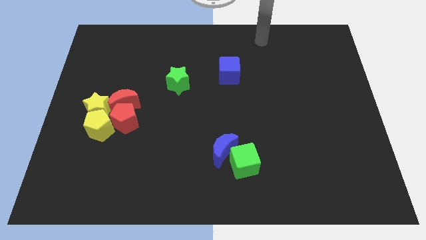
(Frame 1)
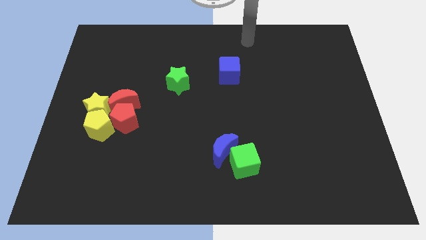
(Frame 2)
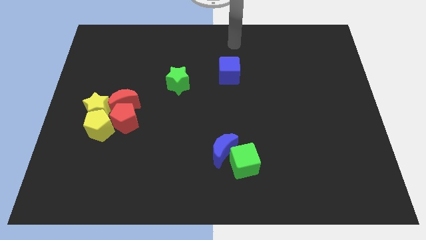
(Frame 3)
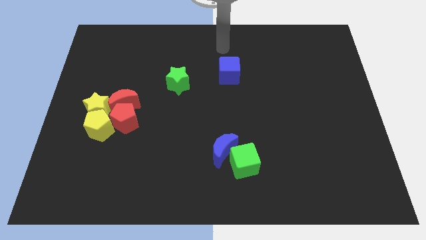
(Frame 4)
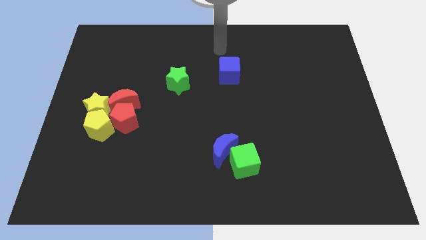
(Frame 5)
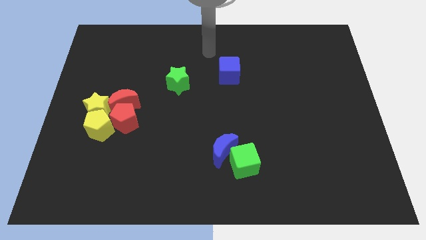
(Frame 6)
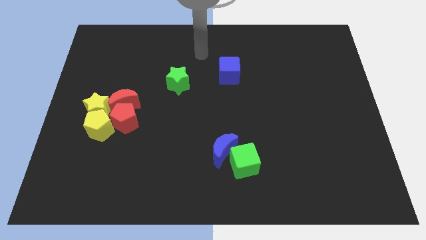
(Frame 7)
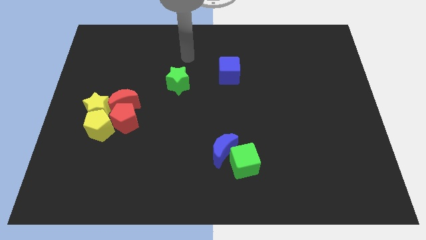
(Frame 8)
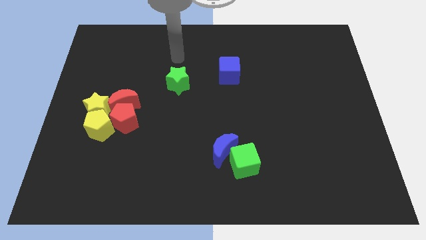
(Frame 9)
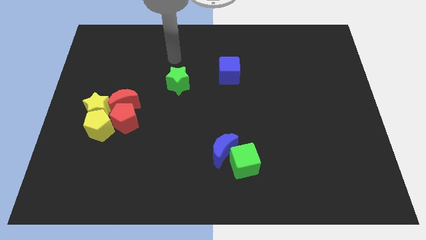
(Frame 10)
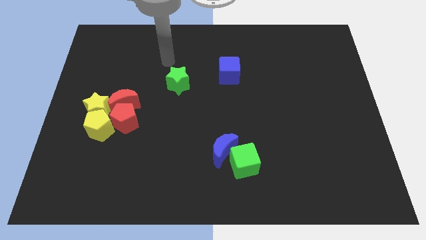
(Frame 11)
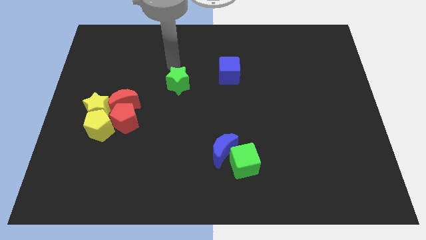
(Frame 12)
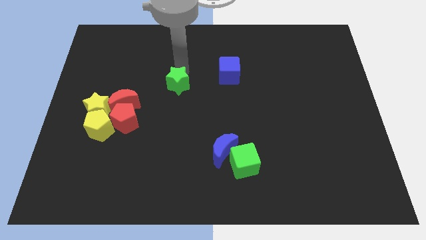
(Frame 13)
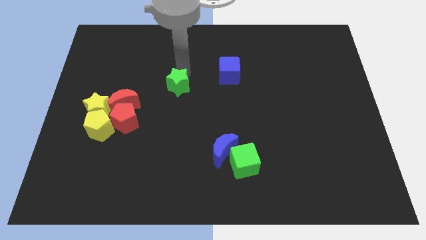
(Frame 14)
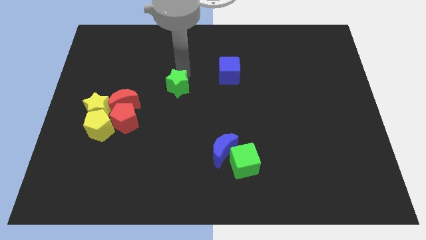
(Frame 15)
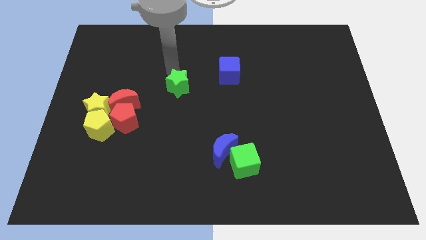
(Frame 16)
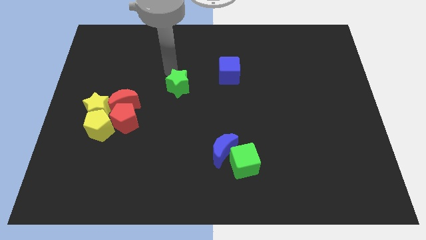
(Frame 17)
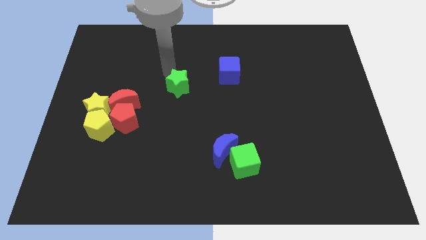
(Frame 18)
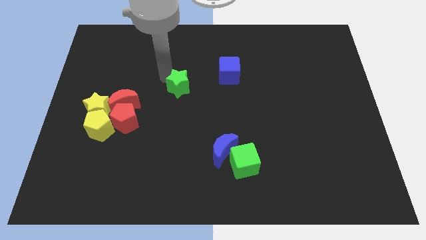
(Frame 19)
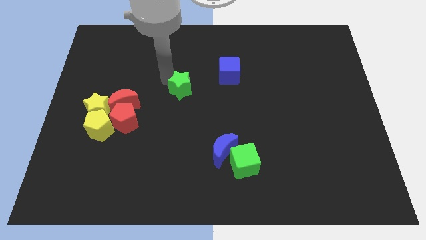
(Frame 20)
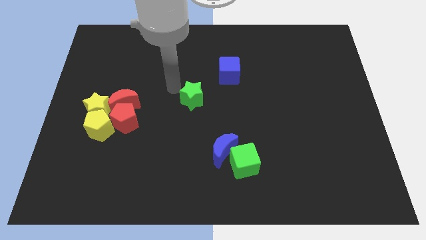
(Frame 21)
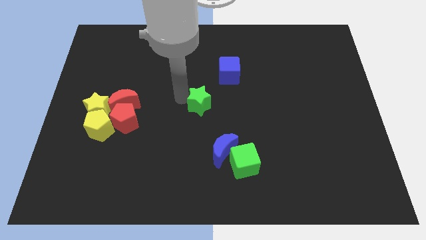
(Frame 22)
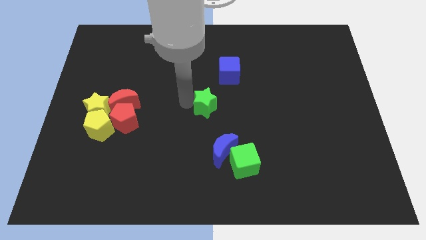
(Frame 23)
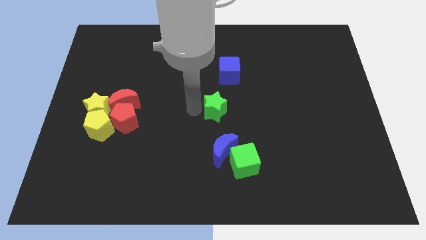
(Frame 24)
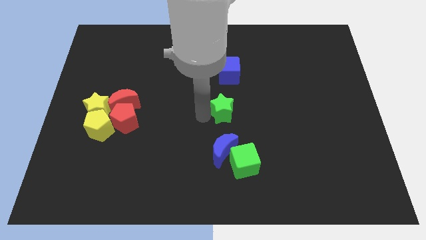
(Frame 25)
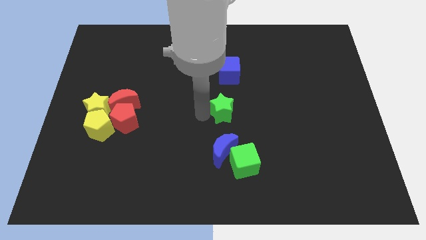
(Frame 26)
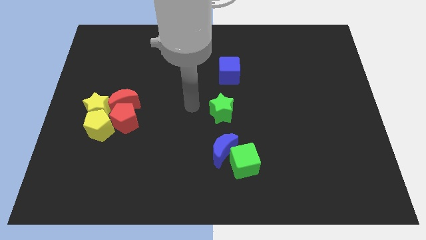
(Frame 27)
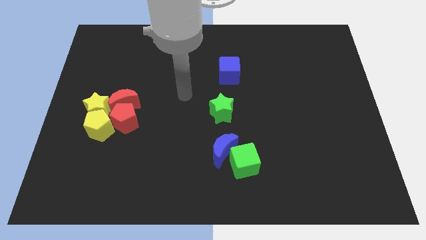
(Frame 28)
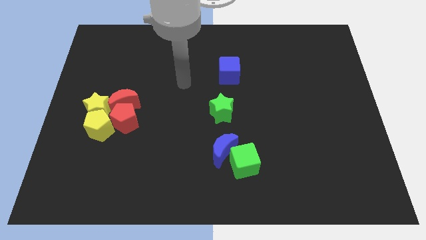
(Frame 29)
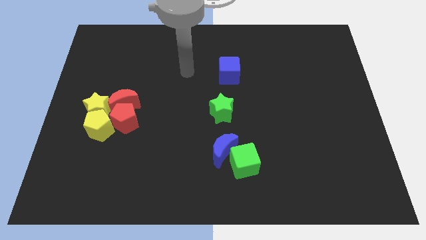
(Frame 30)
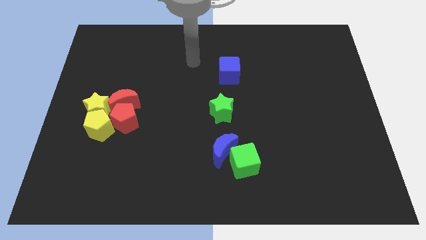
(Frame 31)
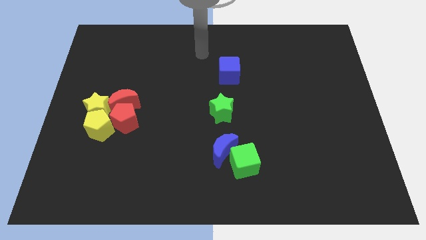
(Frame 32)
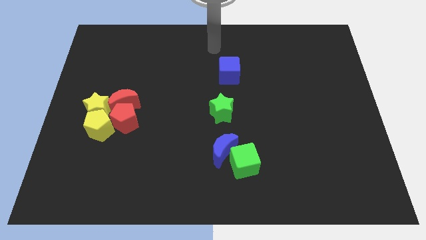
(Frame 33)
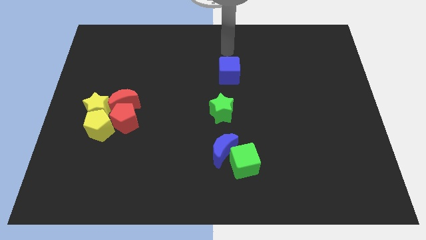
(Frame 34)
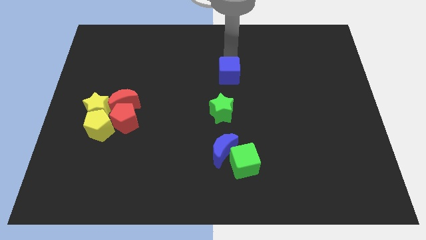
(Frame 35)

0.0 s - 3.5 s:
push the green star towards the blue crescent

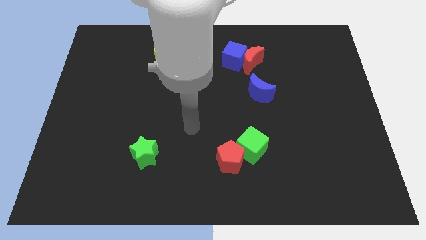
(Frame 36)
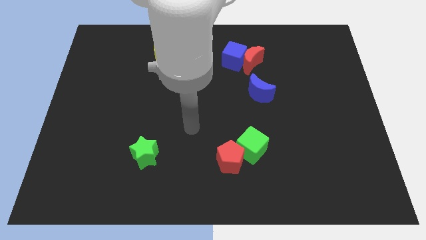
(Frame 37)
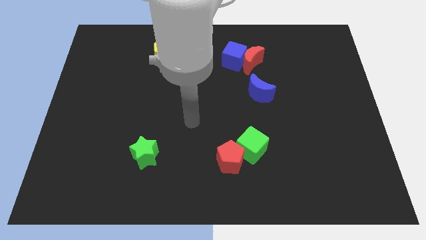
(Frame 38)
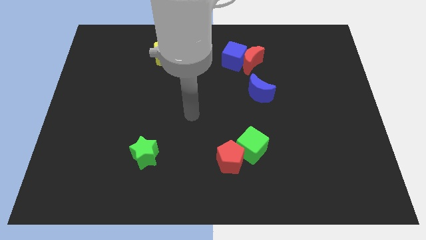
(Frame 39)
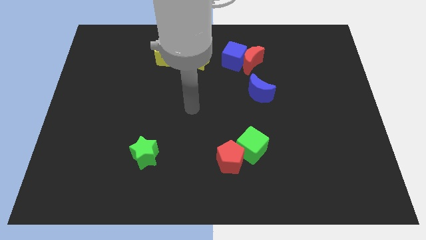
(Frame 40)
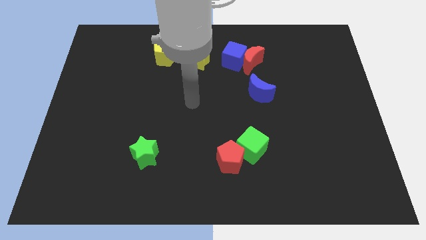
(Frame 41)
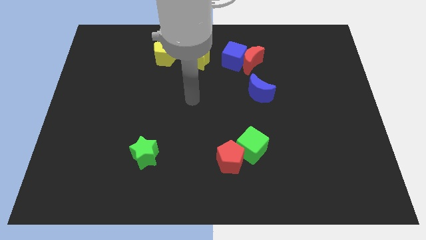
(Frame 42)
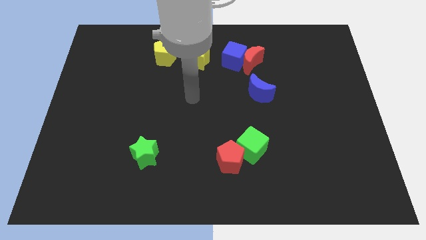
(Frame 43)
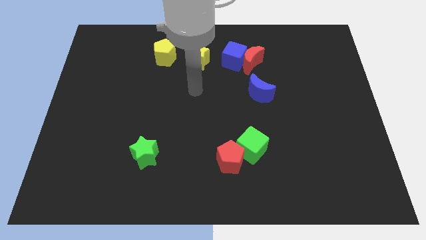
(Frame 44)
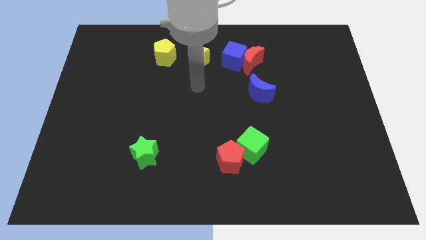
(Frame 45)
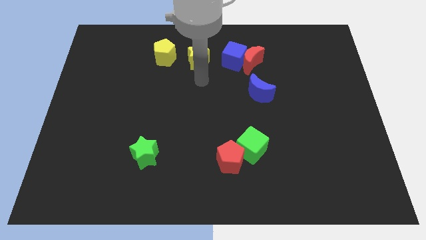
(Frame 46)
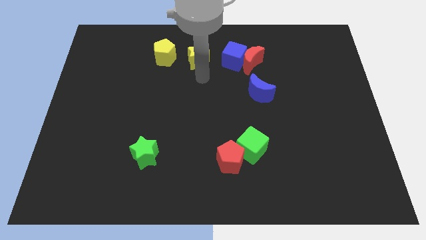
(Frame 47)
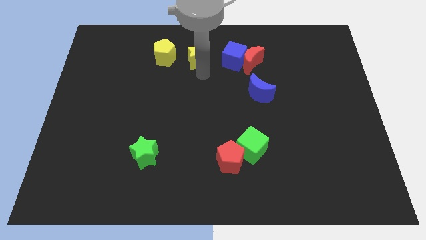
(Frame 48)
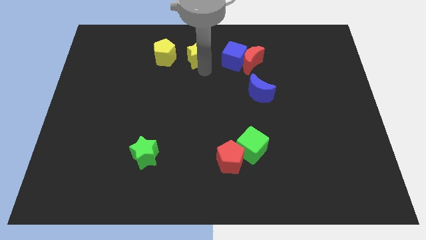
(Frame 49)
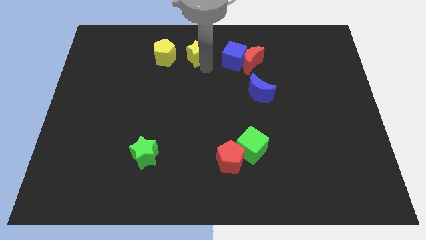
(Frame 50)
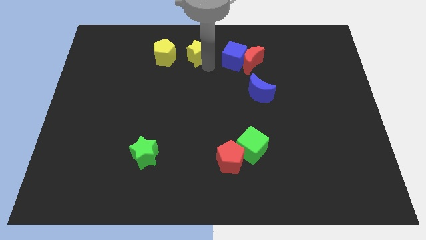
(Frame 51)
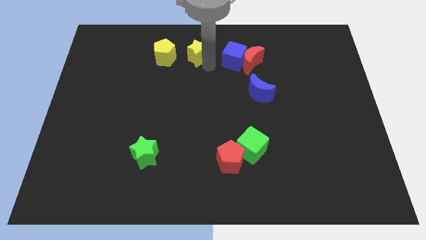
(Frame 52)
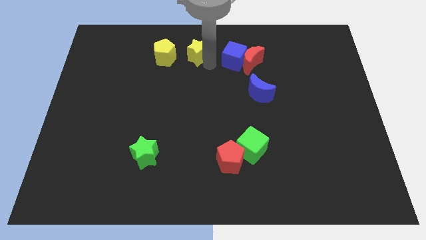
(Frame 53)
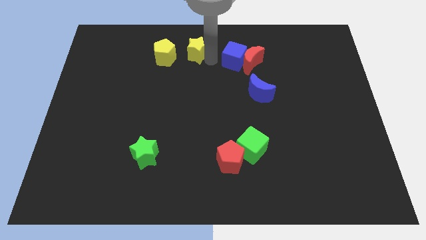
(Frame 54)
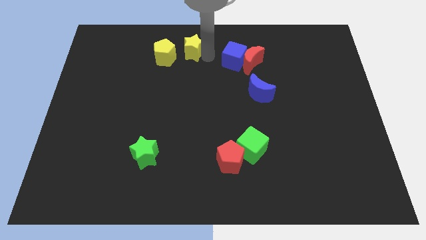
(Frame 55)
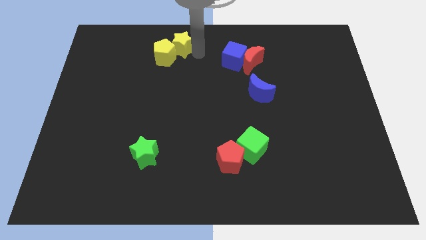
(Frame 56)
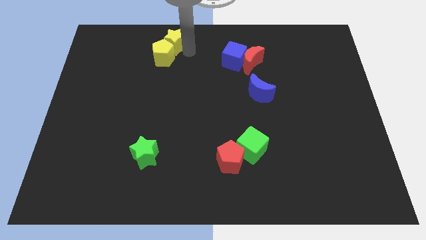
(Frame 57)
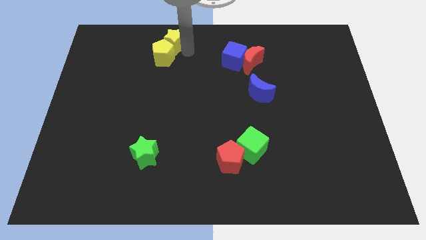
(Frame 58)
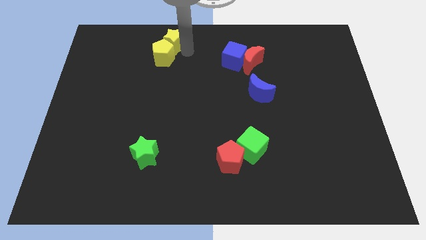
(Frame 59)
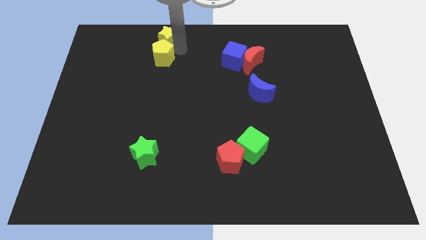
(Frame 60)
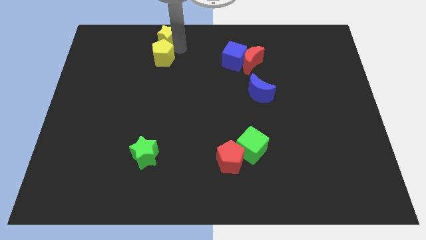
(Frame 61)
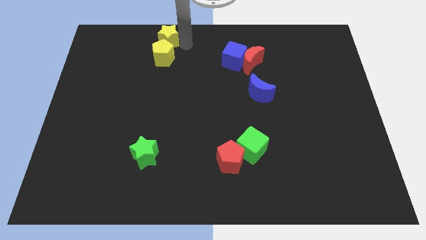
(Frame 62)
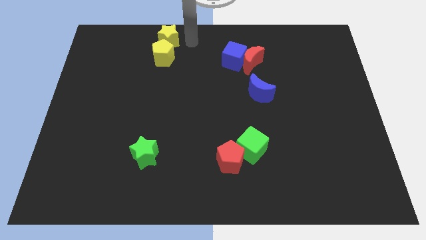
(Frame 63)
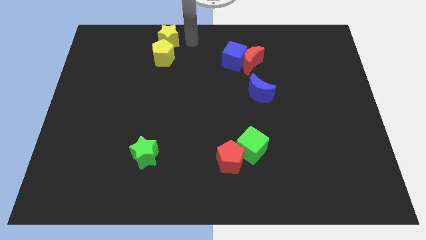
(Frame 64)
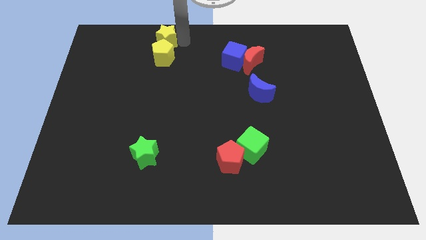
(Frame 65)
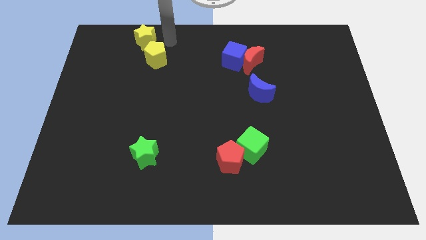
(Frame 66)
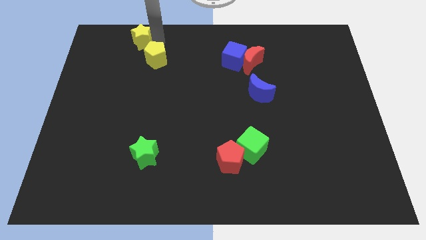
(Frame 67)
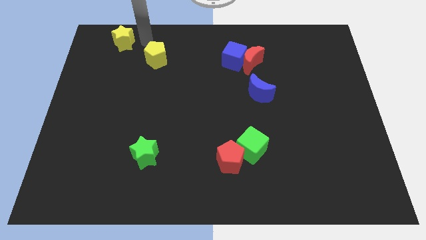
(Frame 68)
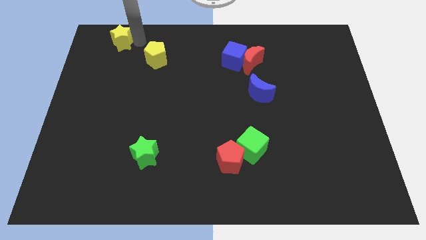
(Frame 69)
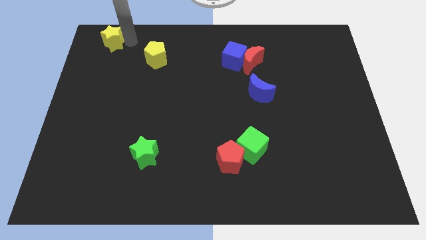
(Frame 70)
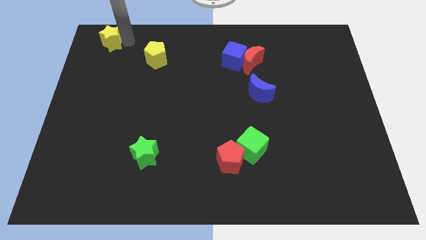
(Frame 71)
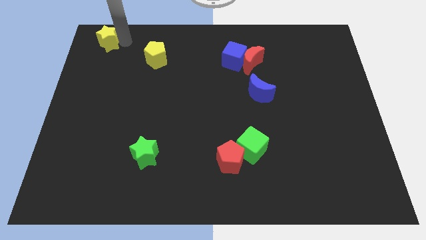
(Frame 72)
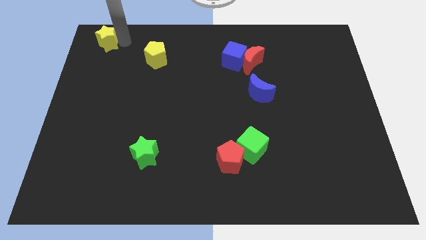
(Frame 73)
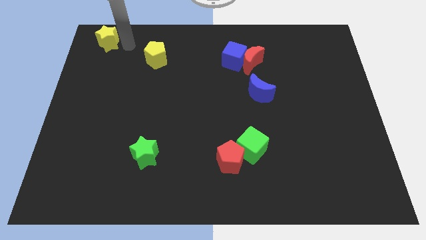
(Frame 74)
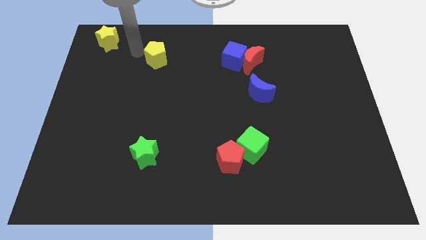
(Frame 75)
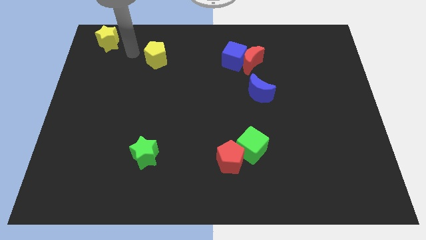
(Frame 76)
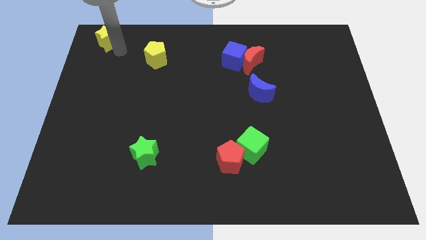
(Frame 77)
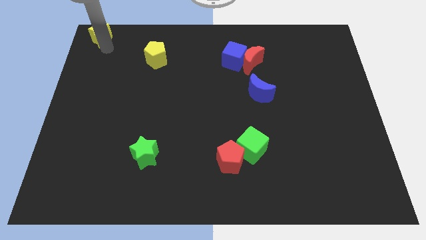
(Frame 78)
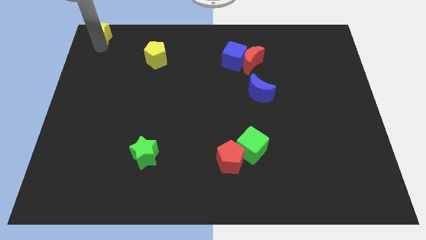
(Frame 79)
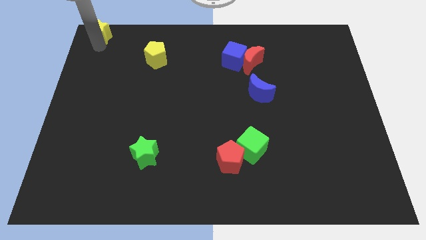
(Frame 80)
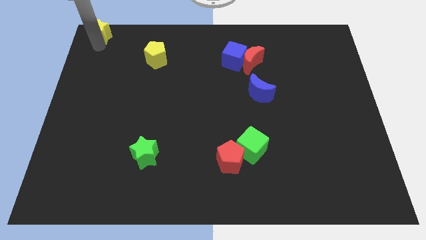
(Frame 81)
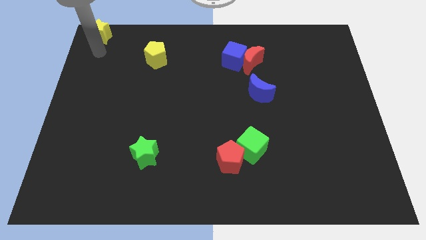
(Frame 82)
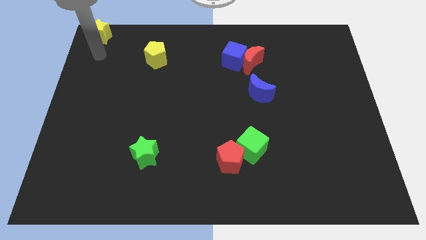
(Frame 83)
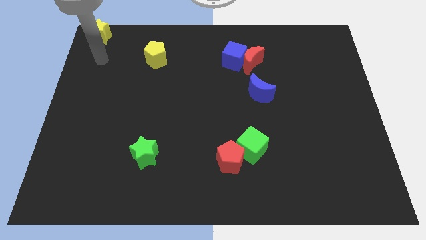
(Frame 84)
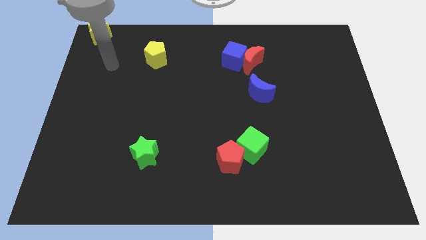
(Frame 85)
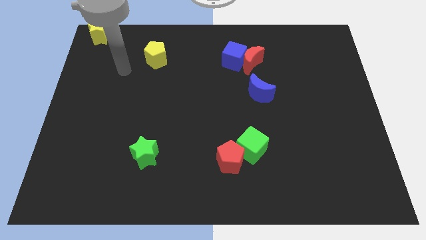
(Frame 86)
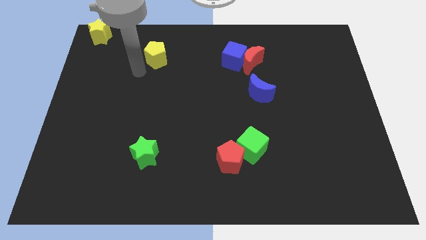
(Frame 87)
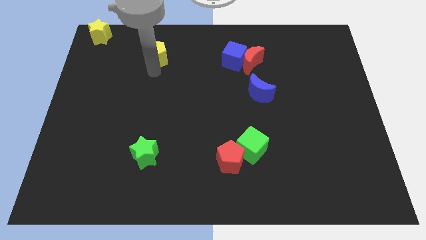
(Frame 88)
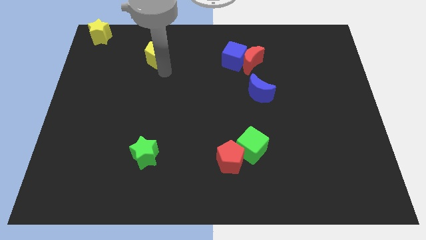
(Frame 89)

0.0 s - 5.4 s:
place the arm down to the yellow pentagon

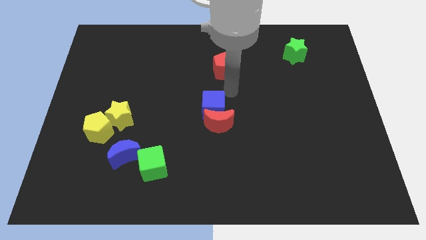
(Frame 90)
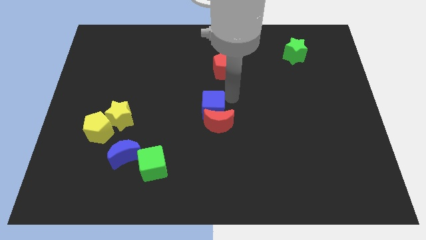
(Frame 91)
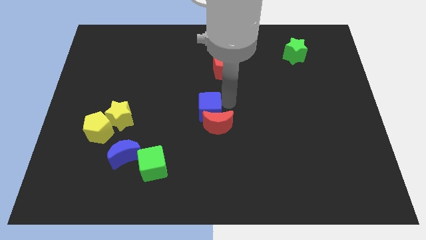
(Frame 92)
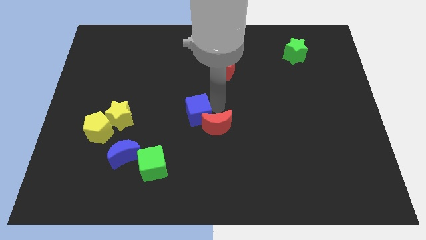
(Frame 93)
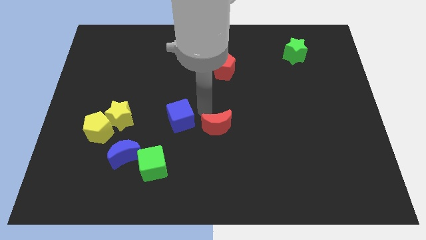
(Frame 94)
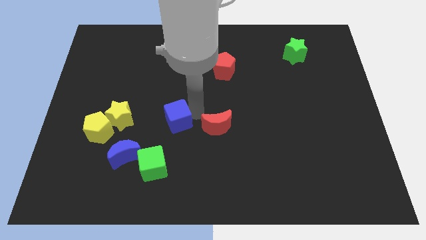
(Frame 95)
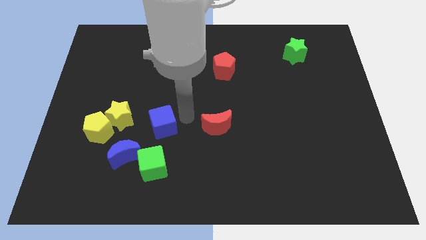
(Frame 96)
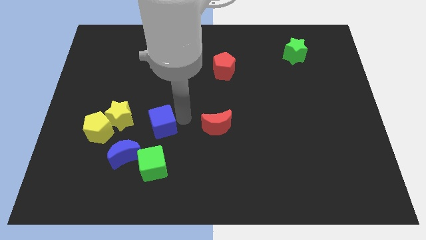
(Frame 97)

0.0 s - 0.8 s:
separate blue cube from red moon
